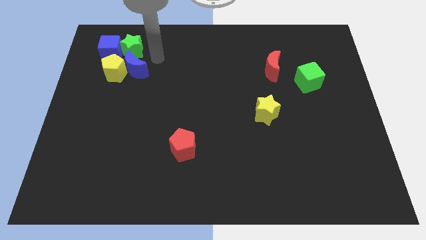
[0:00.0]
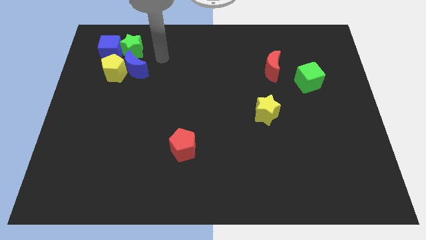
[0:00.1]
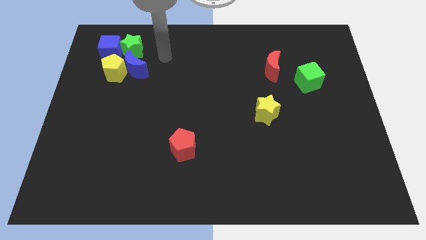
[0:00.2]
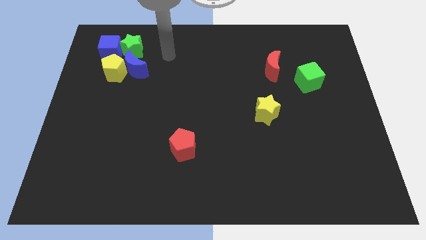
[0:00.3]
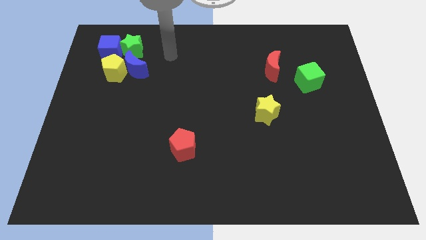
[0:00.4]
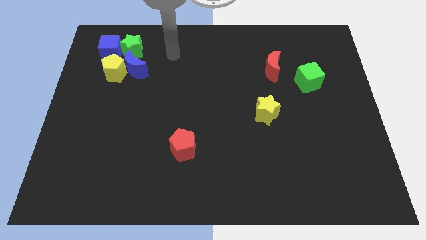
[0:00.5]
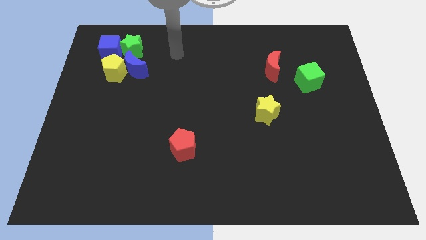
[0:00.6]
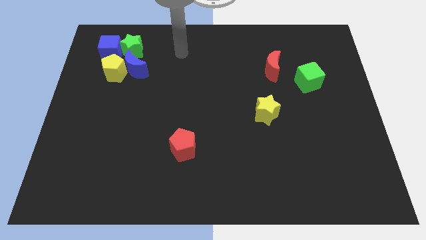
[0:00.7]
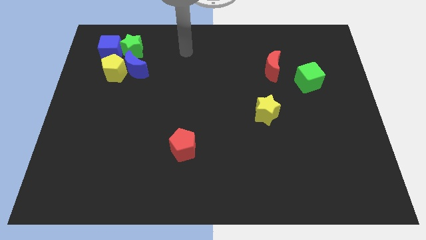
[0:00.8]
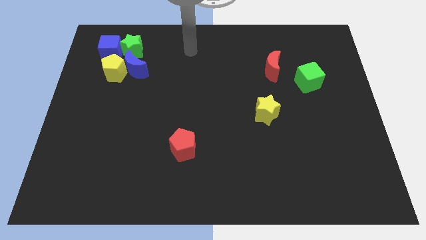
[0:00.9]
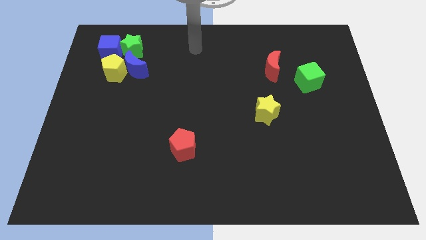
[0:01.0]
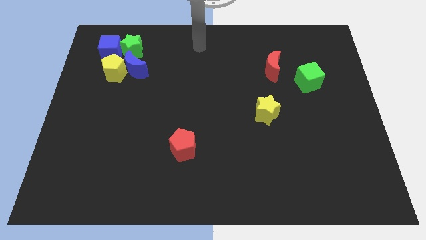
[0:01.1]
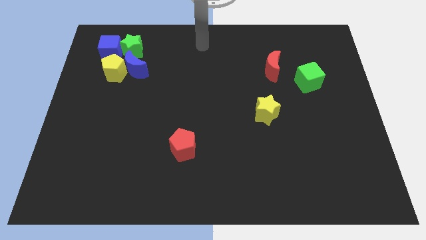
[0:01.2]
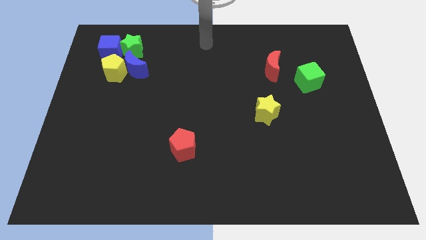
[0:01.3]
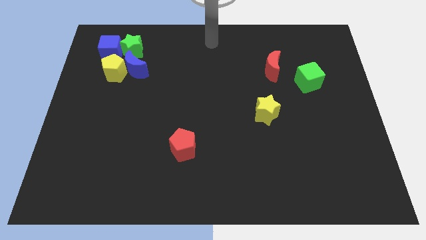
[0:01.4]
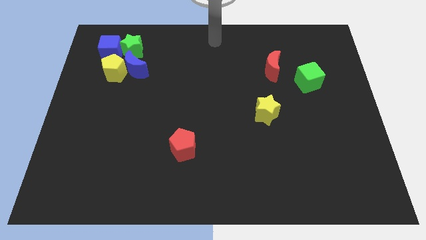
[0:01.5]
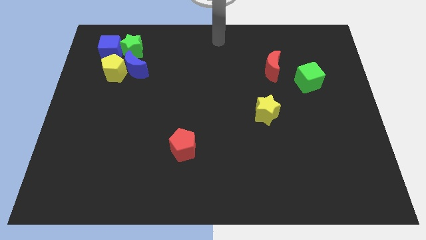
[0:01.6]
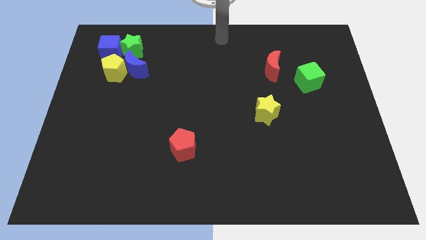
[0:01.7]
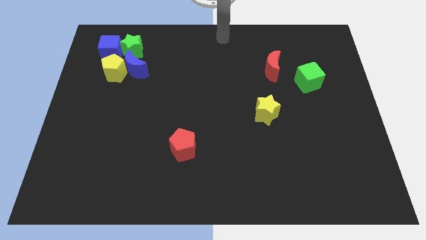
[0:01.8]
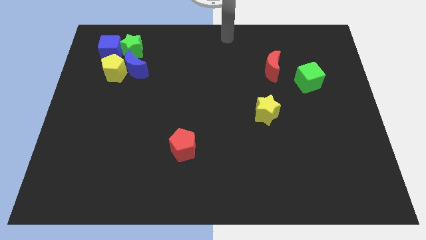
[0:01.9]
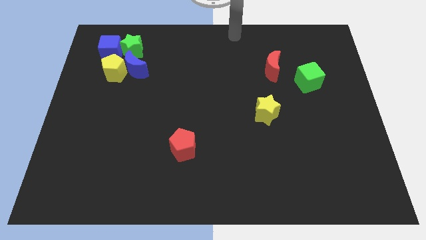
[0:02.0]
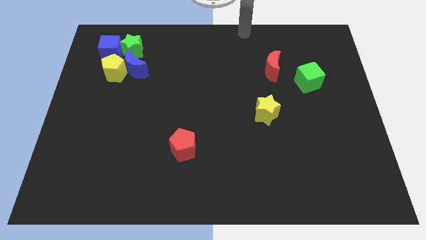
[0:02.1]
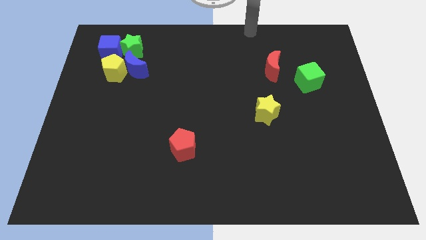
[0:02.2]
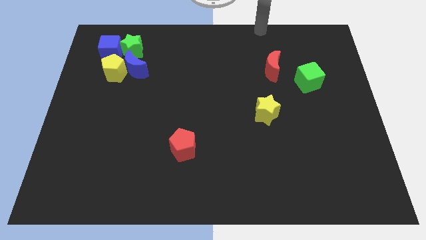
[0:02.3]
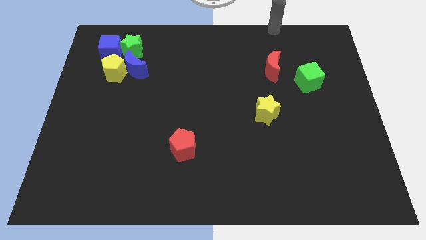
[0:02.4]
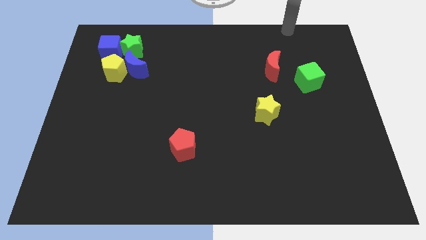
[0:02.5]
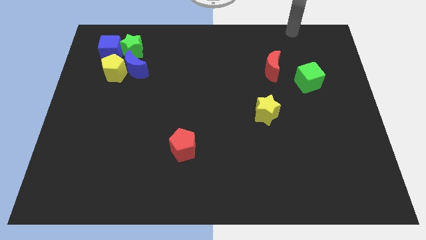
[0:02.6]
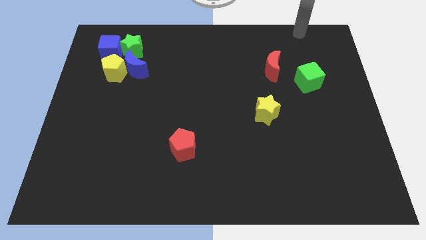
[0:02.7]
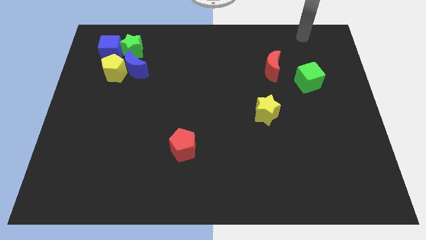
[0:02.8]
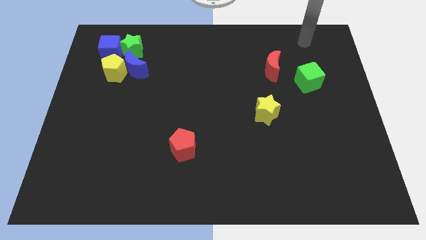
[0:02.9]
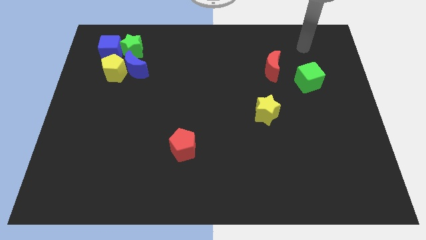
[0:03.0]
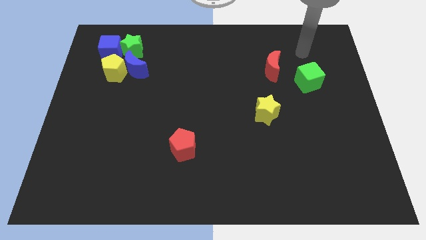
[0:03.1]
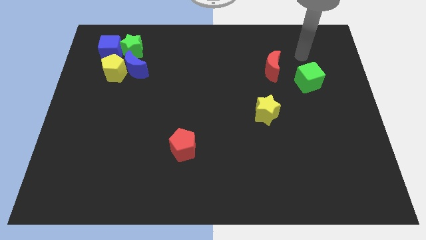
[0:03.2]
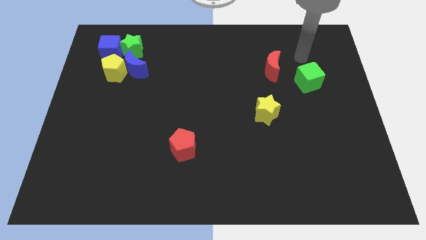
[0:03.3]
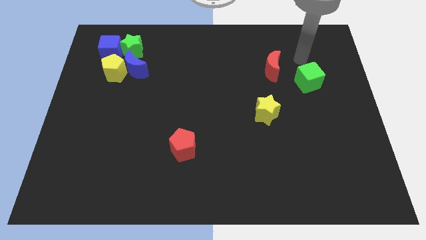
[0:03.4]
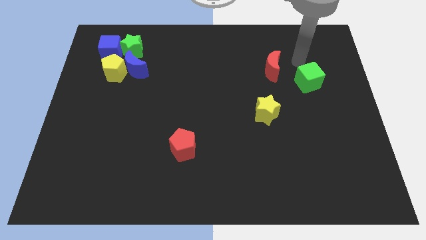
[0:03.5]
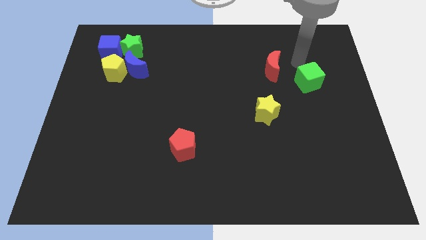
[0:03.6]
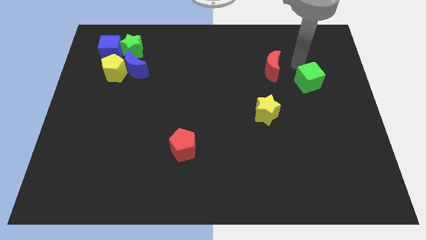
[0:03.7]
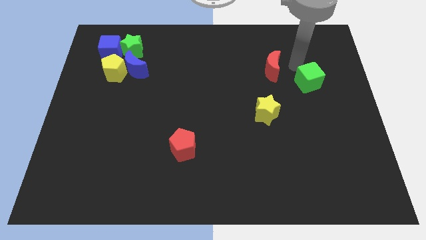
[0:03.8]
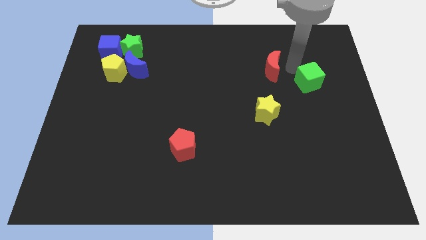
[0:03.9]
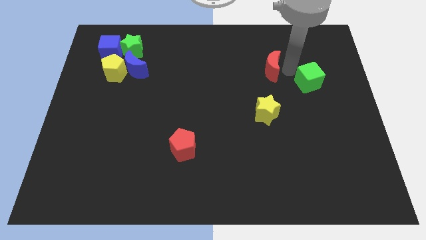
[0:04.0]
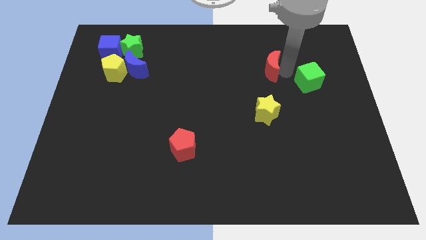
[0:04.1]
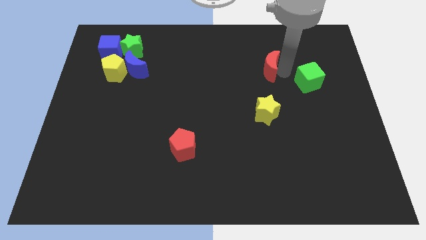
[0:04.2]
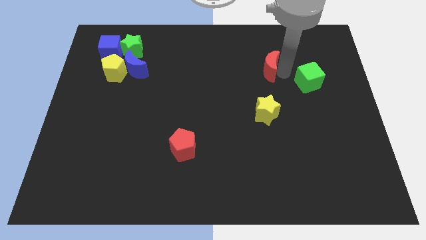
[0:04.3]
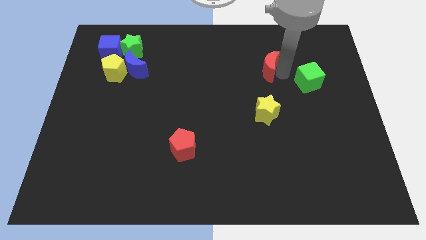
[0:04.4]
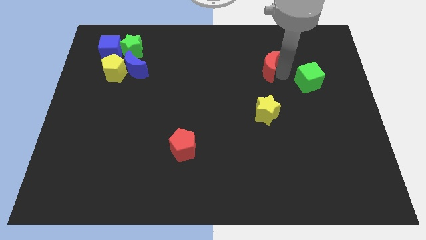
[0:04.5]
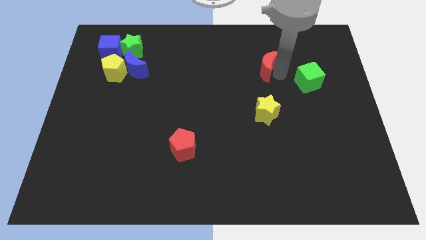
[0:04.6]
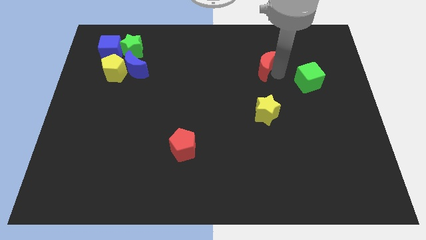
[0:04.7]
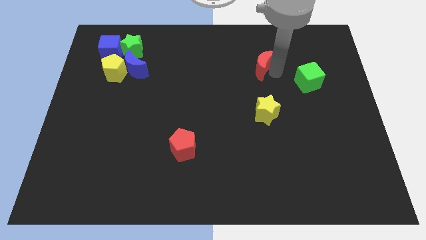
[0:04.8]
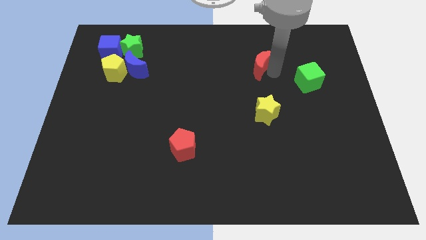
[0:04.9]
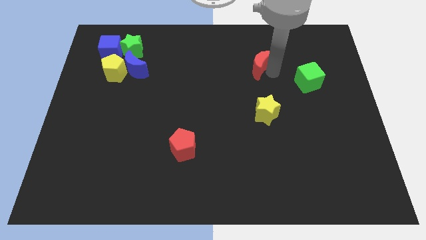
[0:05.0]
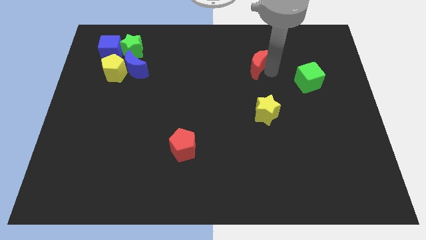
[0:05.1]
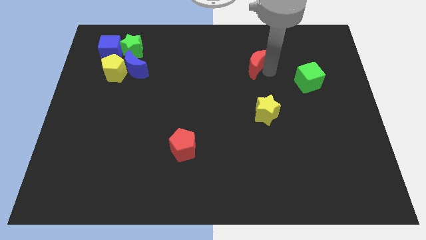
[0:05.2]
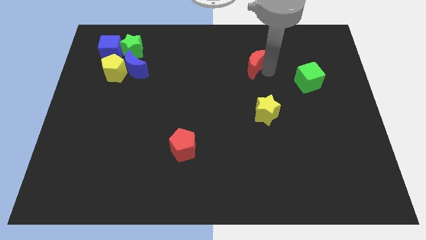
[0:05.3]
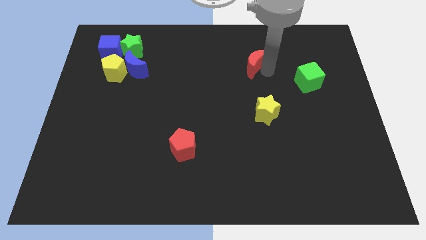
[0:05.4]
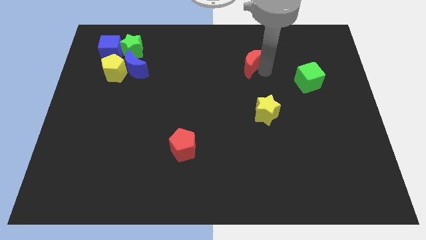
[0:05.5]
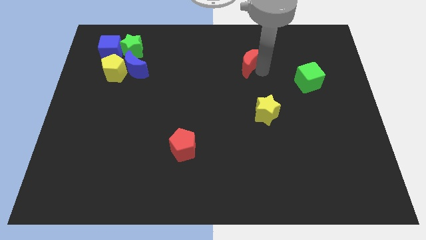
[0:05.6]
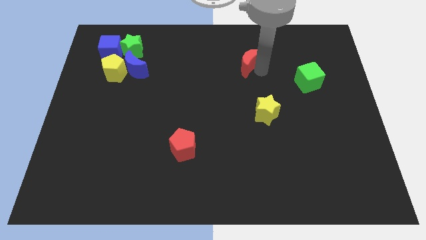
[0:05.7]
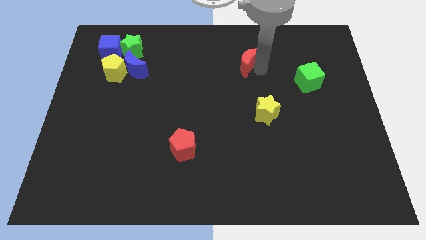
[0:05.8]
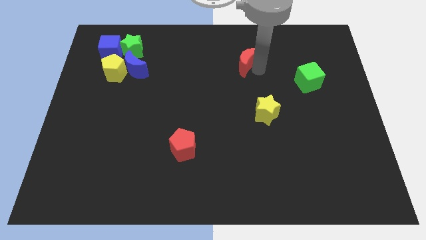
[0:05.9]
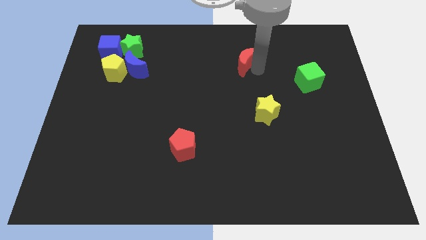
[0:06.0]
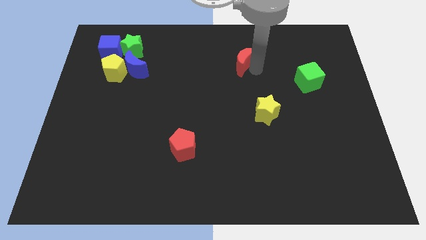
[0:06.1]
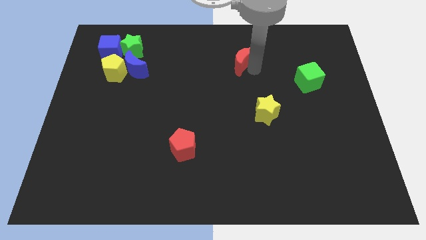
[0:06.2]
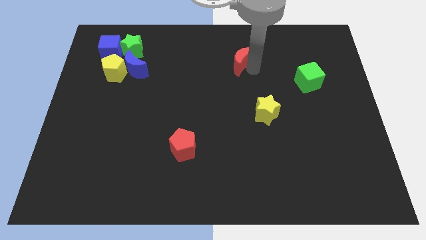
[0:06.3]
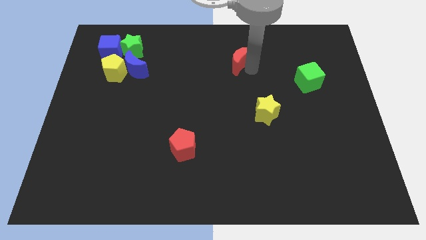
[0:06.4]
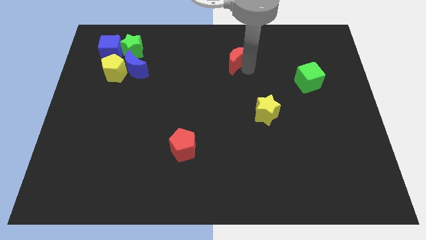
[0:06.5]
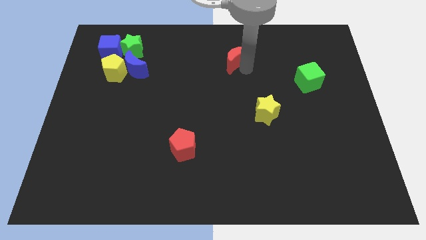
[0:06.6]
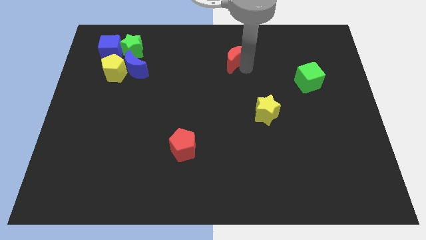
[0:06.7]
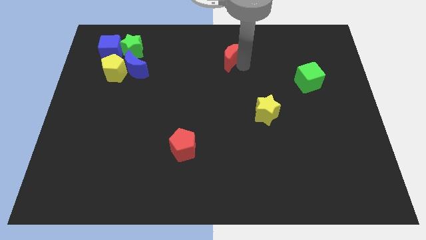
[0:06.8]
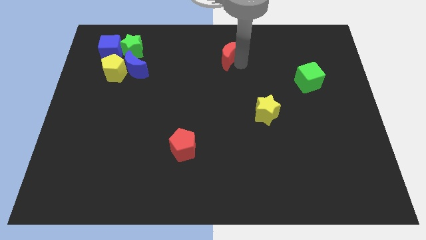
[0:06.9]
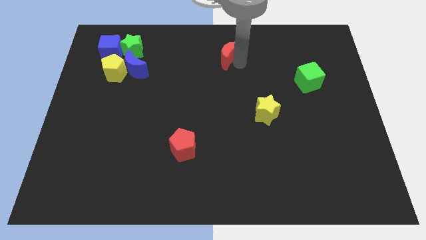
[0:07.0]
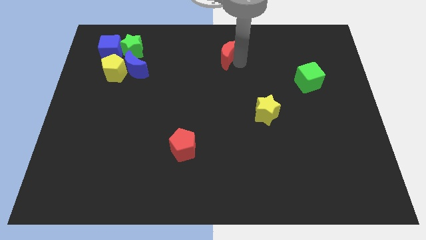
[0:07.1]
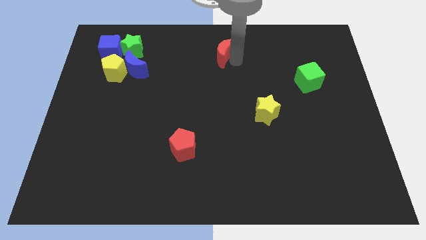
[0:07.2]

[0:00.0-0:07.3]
move the red crescent towards the left side

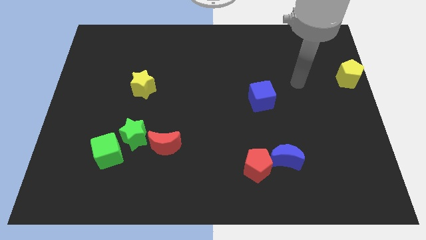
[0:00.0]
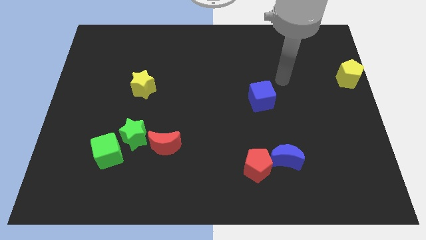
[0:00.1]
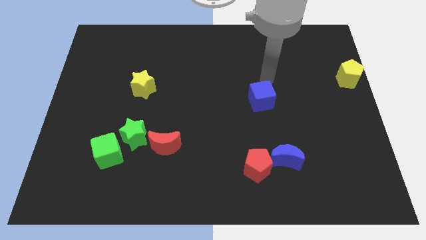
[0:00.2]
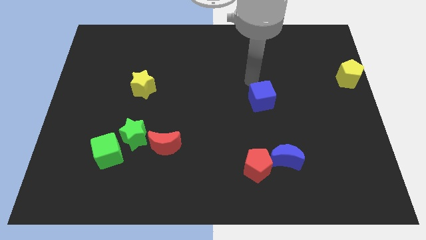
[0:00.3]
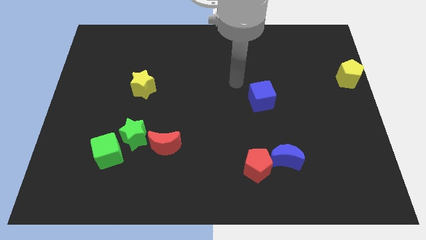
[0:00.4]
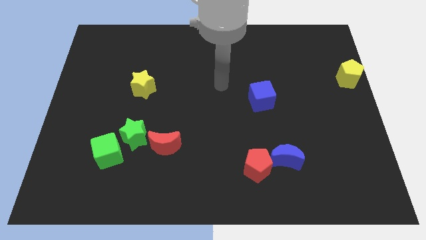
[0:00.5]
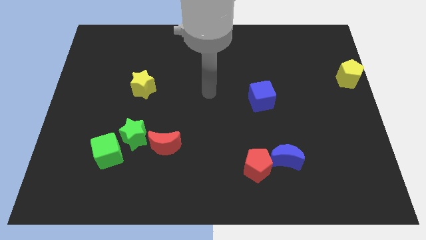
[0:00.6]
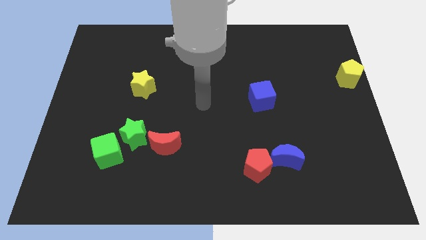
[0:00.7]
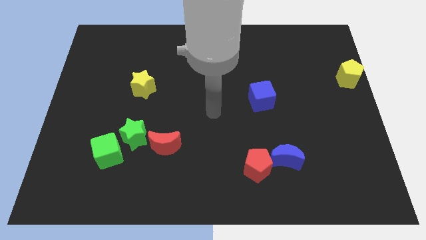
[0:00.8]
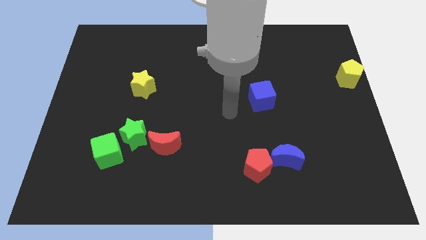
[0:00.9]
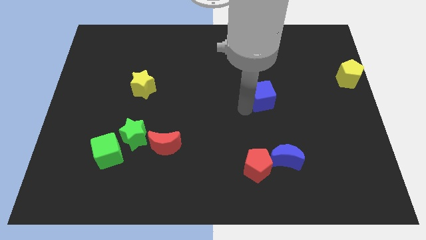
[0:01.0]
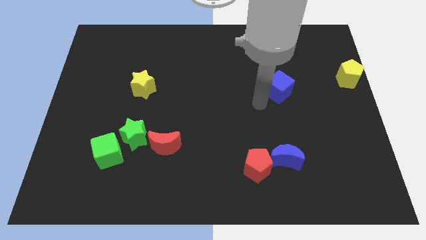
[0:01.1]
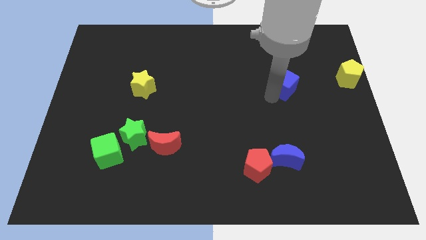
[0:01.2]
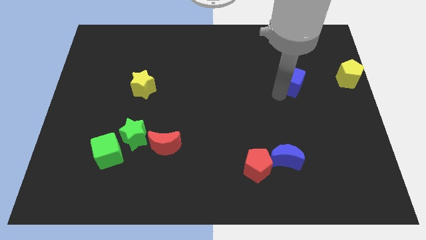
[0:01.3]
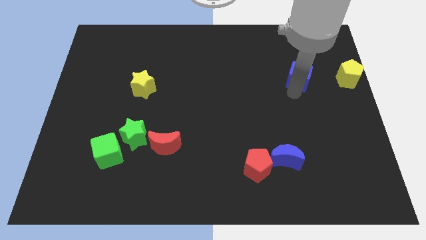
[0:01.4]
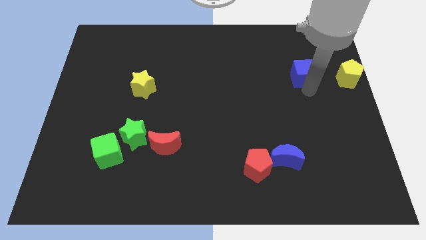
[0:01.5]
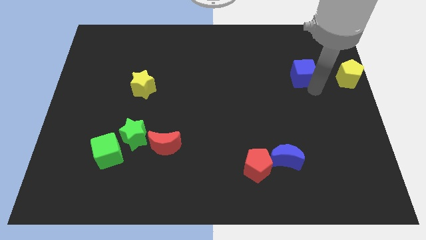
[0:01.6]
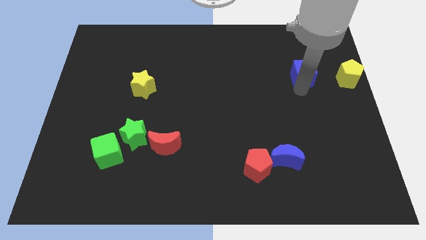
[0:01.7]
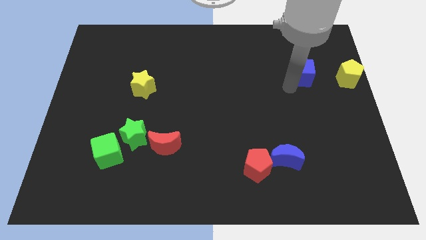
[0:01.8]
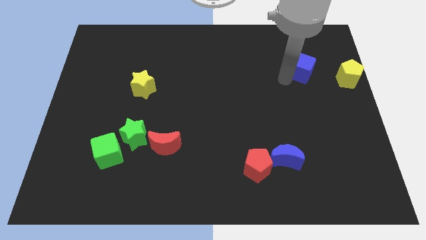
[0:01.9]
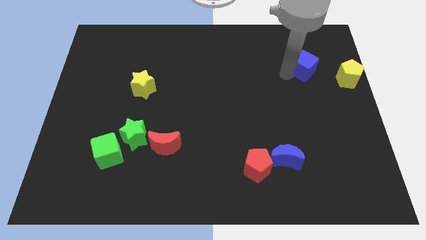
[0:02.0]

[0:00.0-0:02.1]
move blue cube towards yellow pentagon
